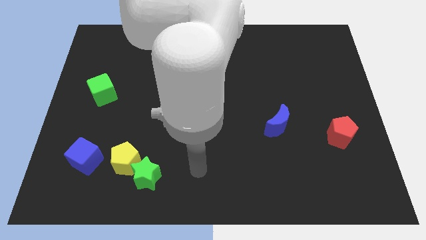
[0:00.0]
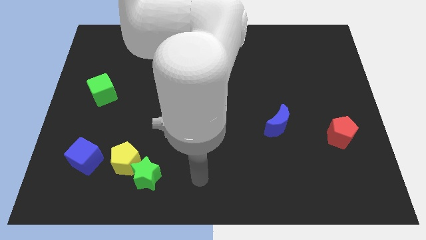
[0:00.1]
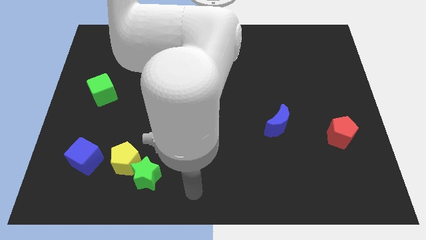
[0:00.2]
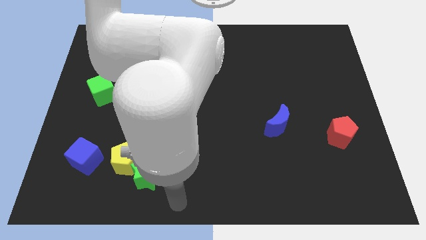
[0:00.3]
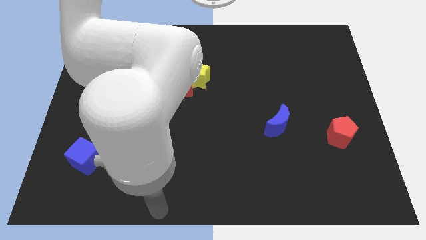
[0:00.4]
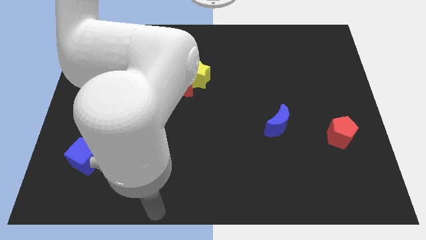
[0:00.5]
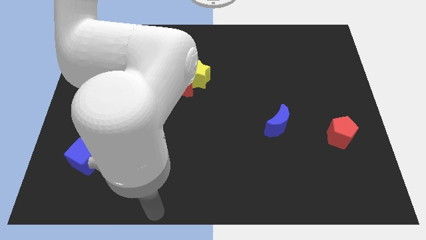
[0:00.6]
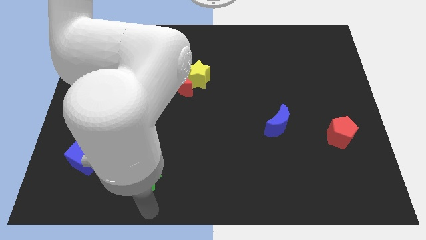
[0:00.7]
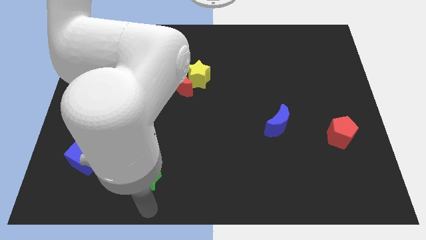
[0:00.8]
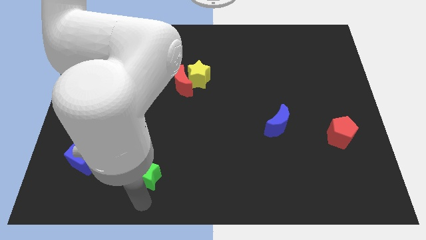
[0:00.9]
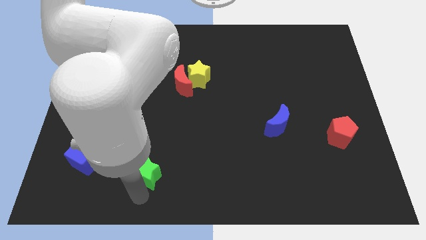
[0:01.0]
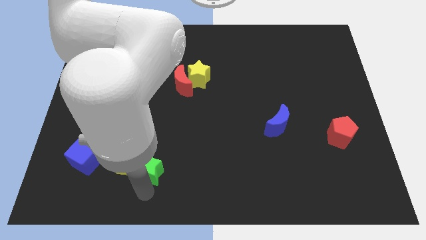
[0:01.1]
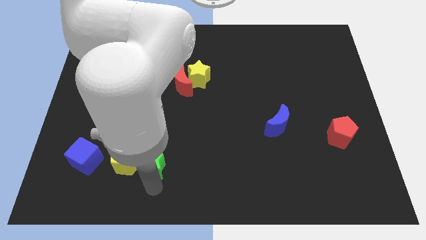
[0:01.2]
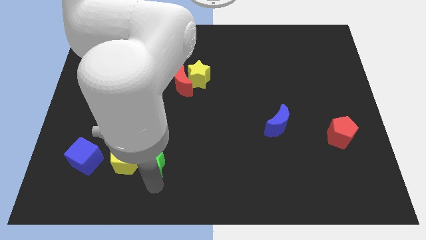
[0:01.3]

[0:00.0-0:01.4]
place yellow pentagon with green star

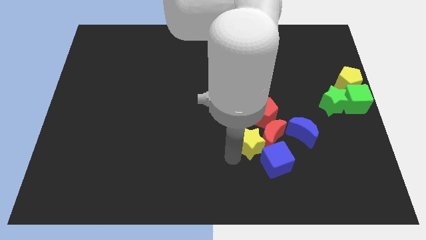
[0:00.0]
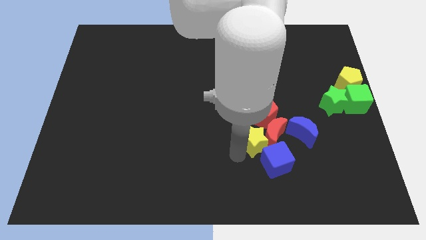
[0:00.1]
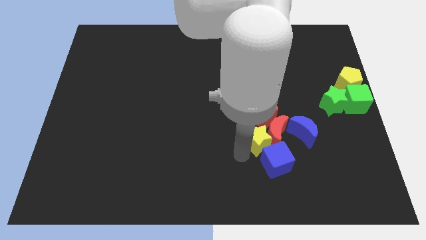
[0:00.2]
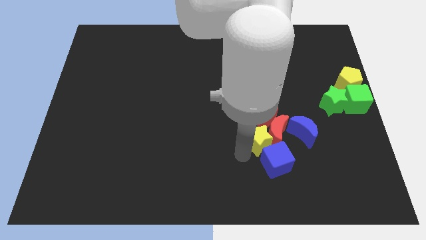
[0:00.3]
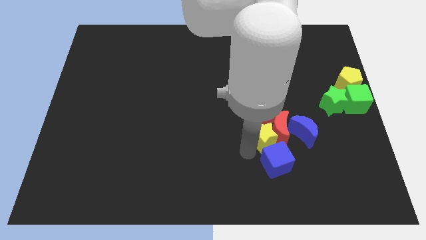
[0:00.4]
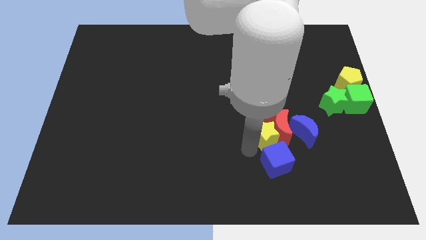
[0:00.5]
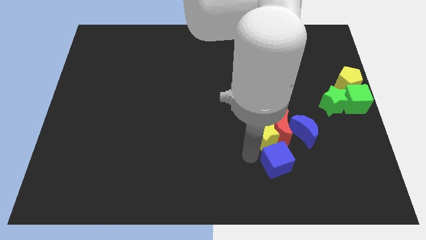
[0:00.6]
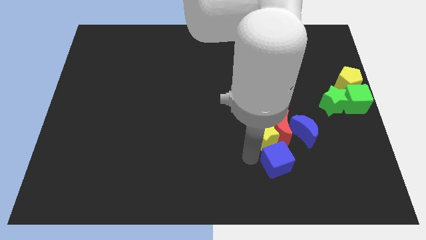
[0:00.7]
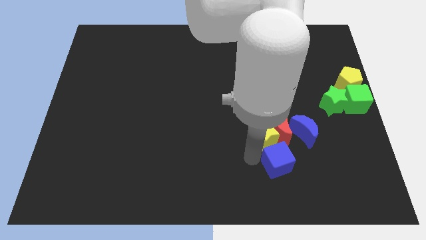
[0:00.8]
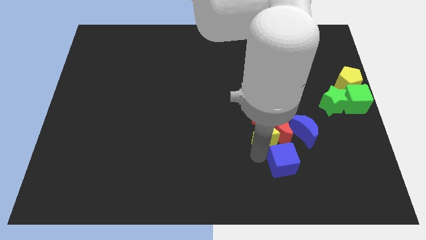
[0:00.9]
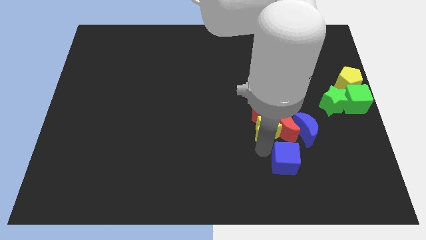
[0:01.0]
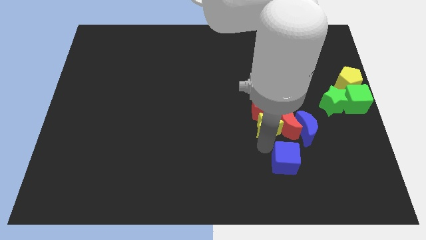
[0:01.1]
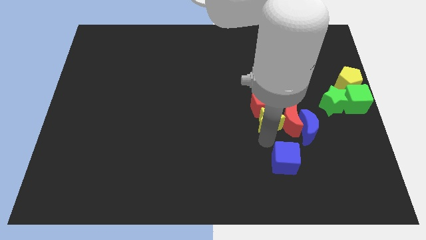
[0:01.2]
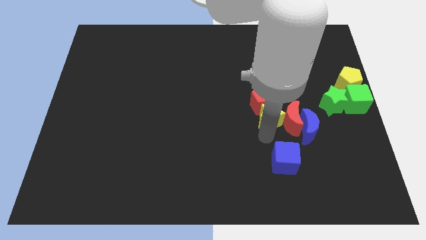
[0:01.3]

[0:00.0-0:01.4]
push the yellow star into the red blocks

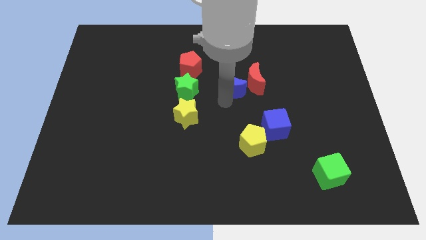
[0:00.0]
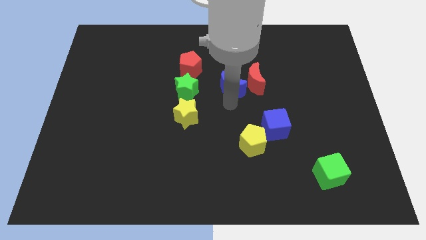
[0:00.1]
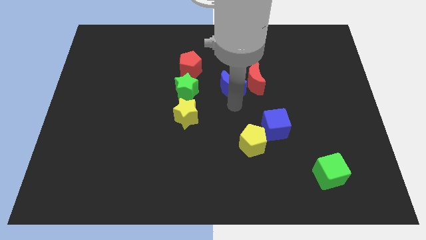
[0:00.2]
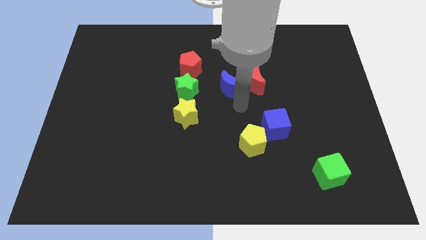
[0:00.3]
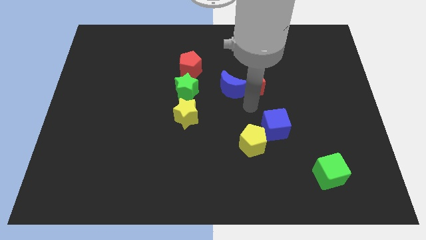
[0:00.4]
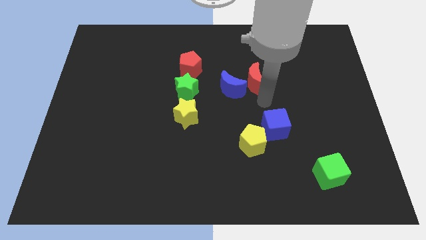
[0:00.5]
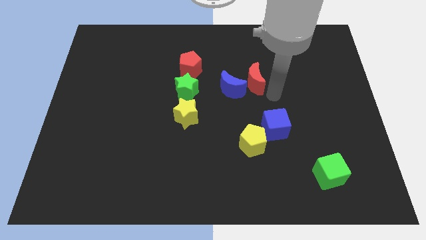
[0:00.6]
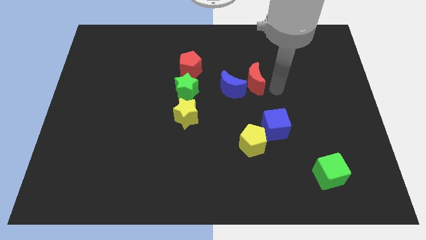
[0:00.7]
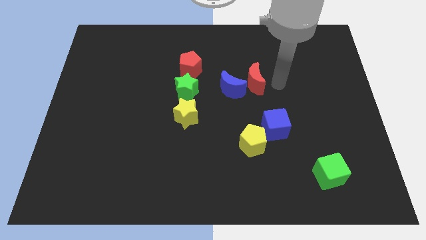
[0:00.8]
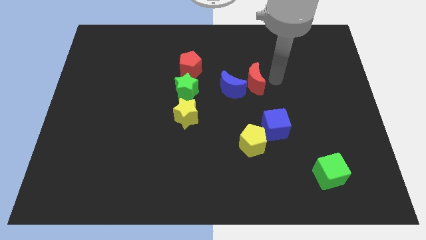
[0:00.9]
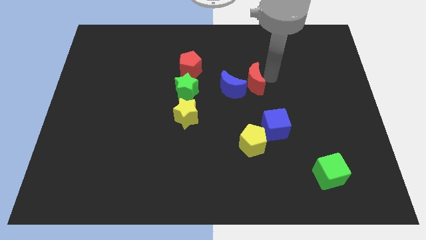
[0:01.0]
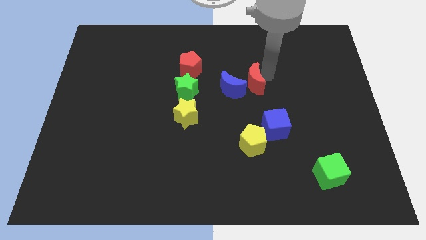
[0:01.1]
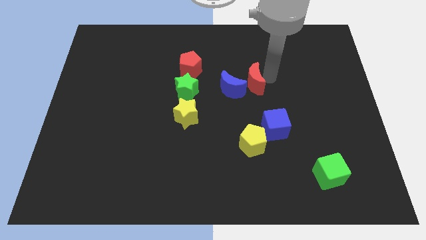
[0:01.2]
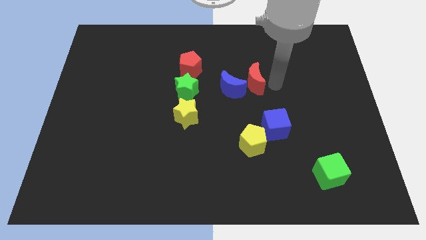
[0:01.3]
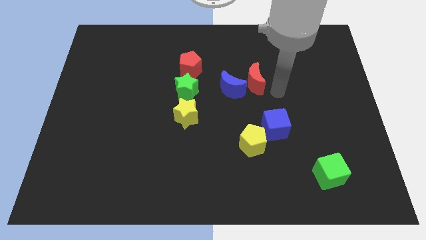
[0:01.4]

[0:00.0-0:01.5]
place the arm at the right side of the red moon

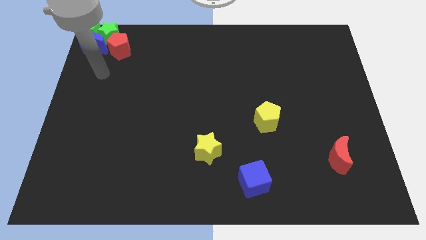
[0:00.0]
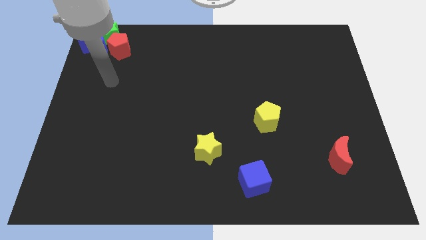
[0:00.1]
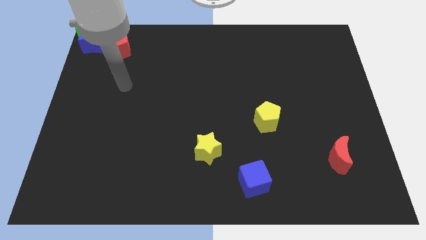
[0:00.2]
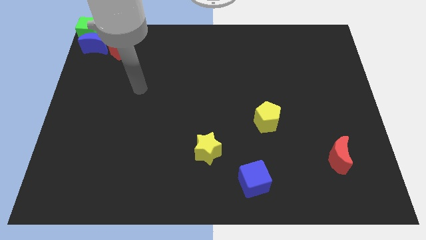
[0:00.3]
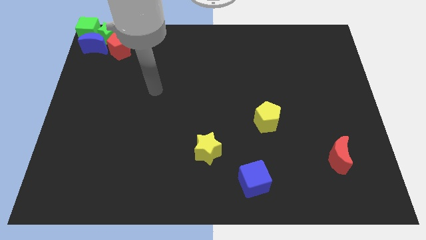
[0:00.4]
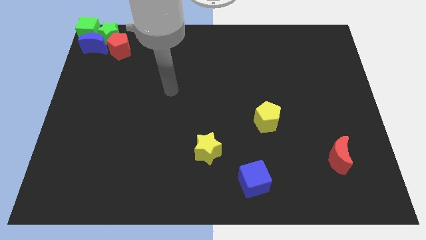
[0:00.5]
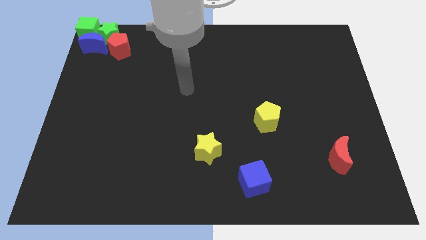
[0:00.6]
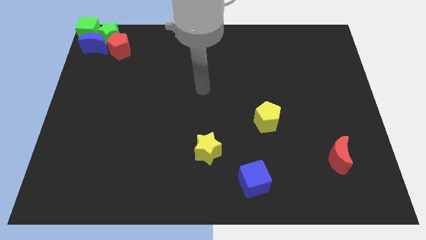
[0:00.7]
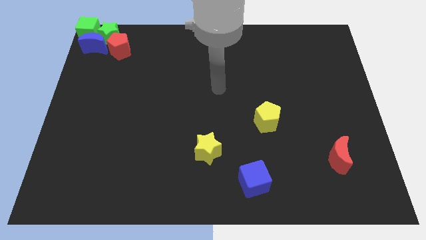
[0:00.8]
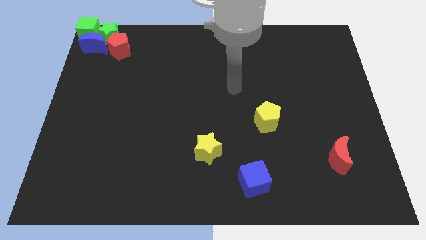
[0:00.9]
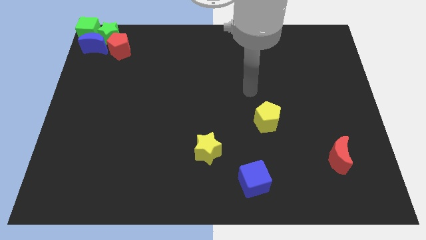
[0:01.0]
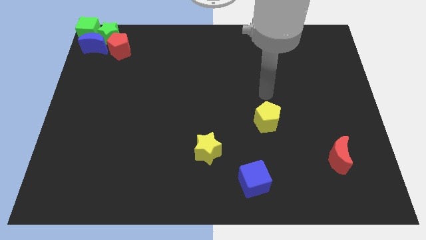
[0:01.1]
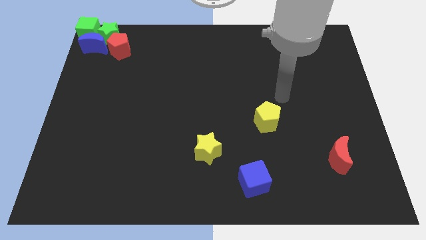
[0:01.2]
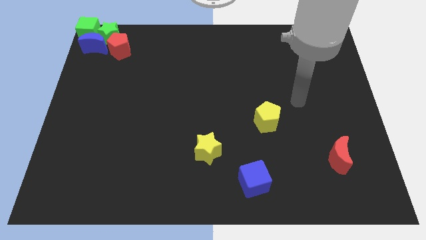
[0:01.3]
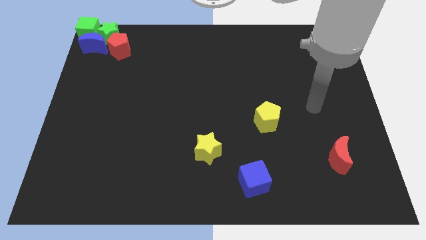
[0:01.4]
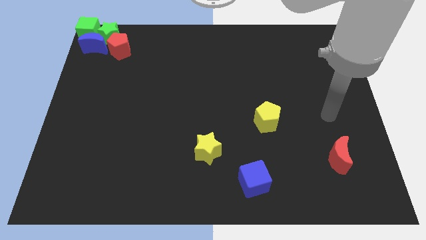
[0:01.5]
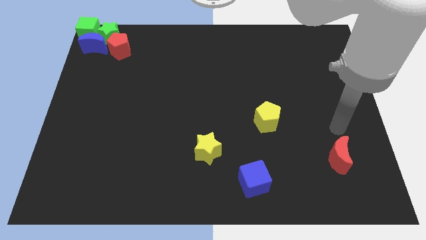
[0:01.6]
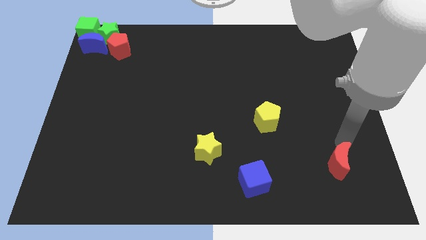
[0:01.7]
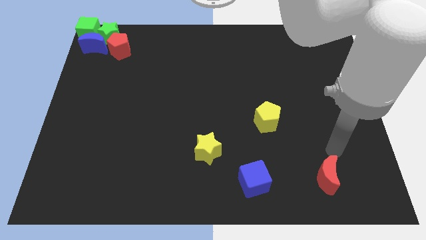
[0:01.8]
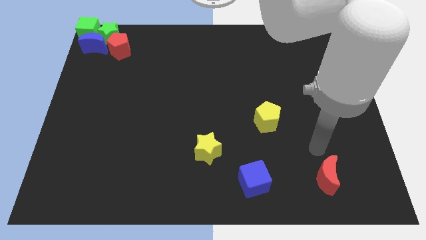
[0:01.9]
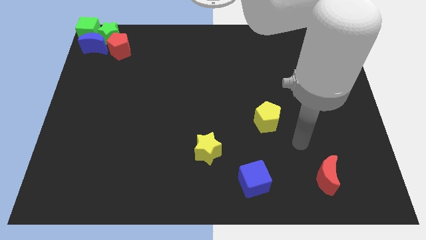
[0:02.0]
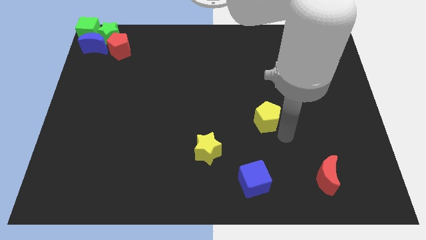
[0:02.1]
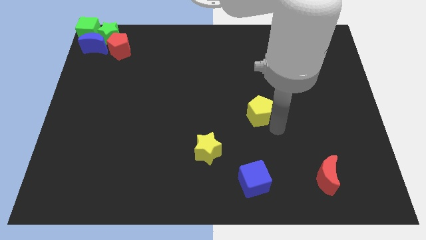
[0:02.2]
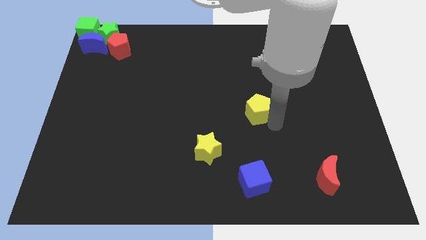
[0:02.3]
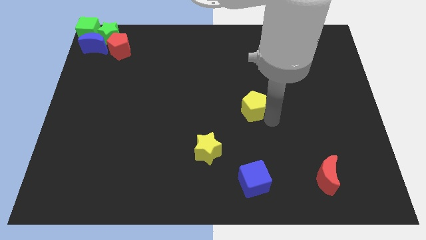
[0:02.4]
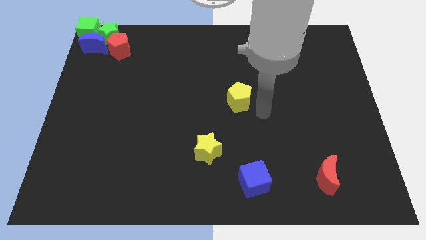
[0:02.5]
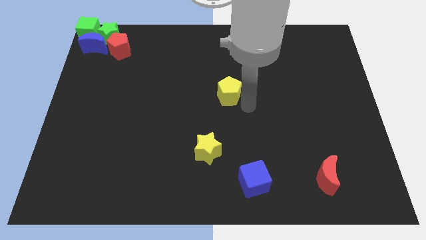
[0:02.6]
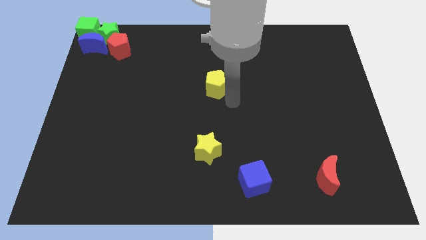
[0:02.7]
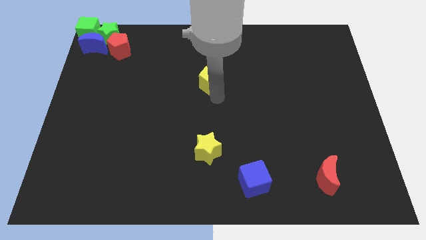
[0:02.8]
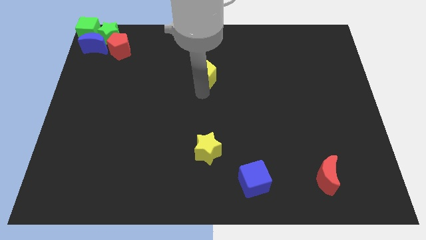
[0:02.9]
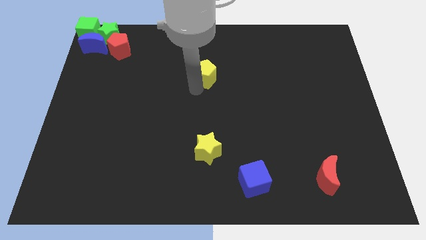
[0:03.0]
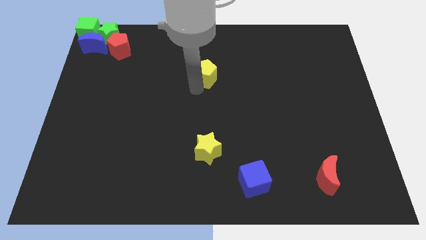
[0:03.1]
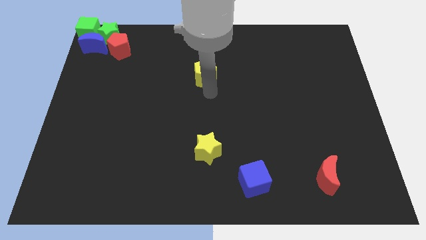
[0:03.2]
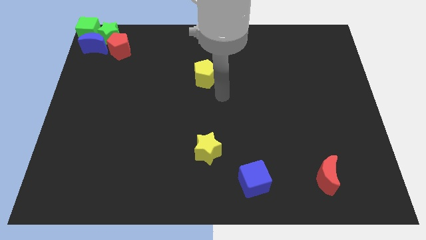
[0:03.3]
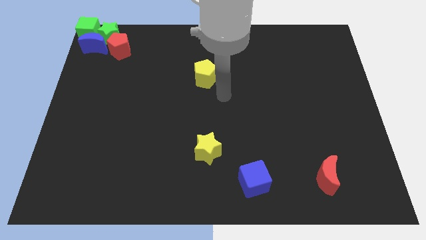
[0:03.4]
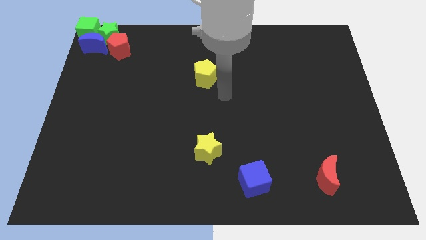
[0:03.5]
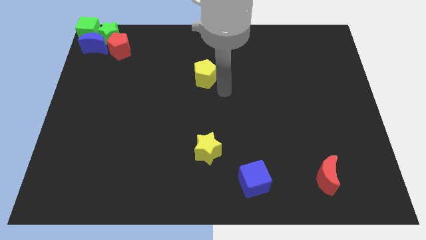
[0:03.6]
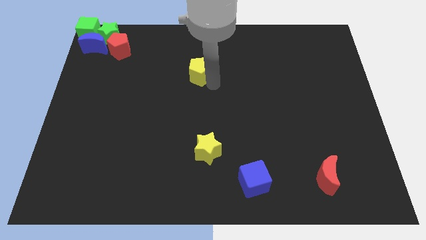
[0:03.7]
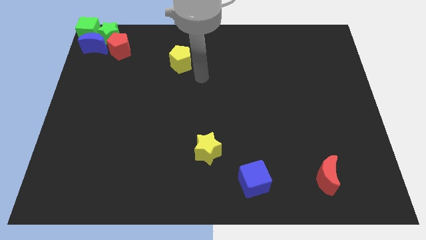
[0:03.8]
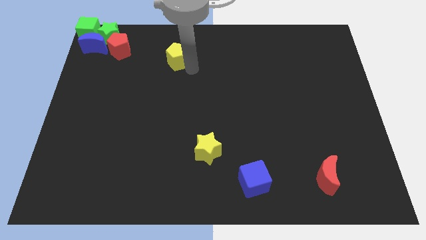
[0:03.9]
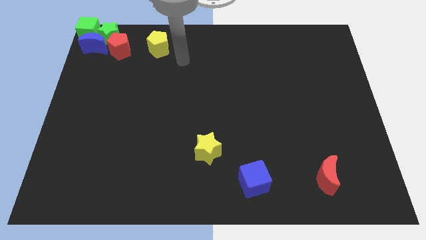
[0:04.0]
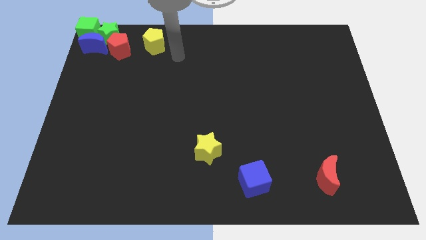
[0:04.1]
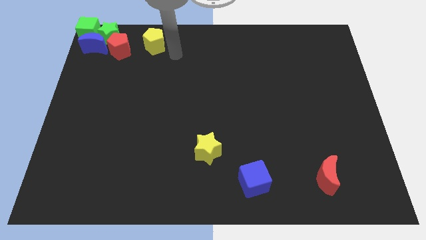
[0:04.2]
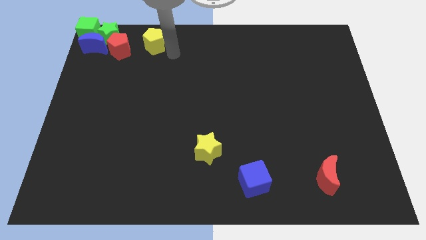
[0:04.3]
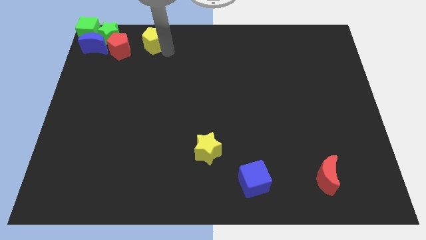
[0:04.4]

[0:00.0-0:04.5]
push the yellow pentagon towards the right side of the green star
